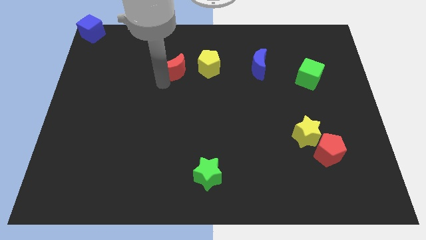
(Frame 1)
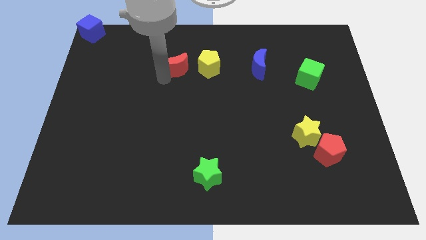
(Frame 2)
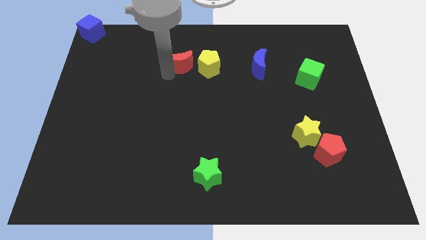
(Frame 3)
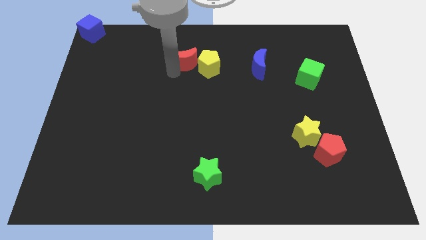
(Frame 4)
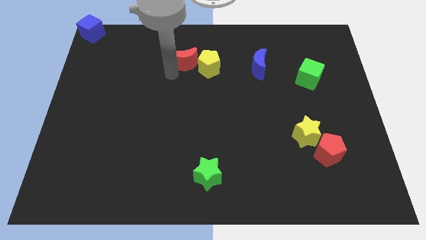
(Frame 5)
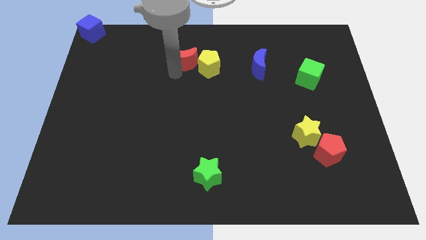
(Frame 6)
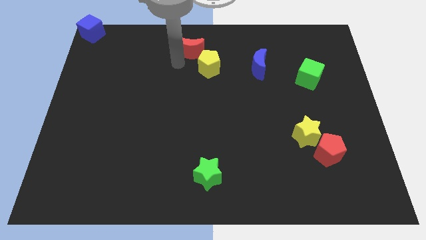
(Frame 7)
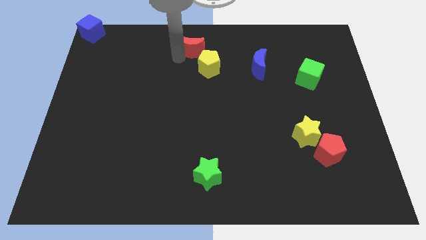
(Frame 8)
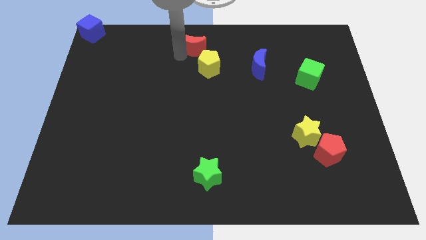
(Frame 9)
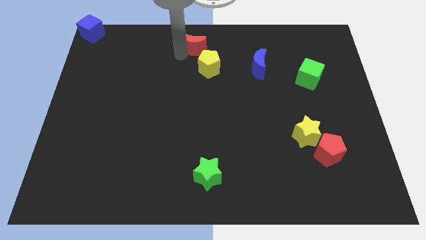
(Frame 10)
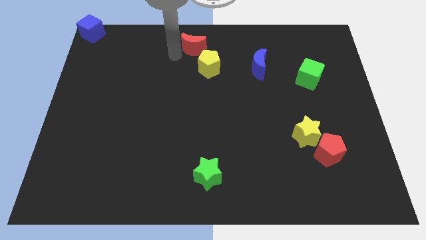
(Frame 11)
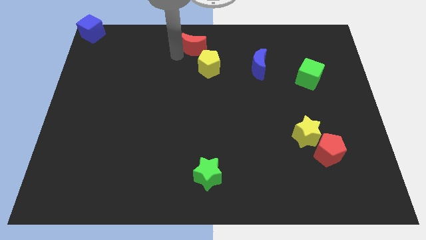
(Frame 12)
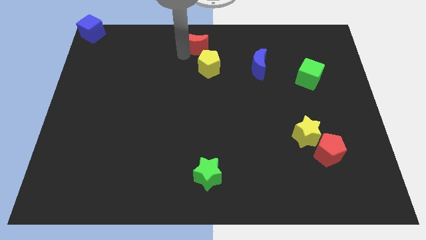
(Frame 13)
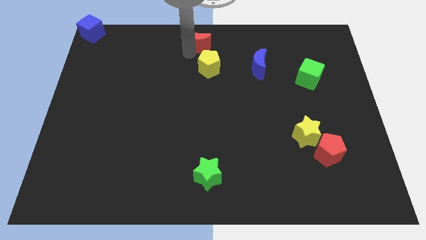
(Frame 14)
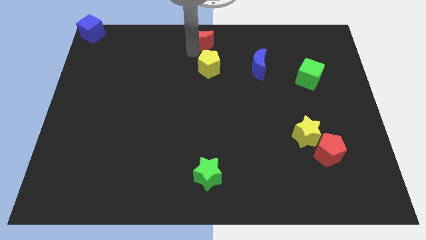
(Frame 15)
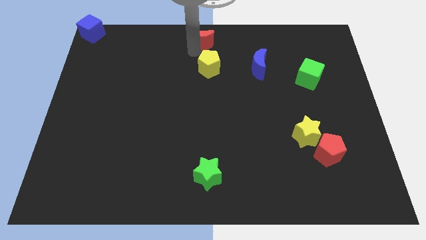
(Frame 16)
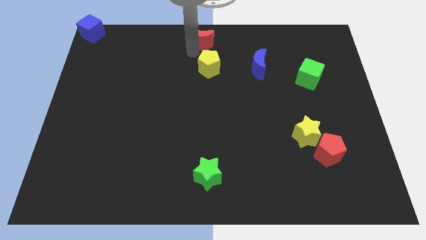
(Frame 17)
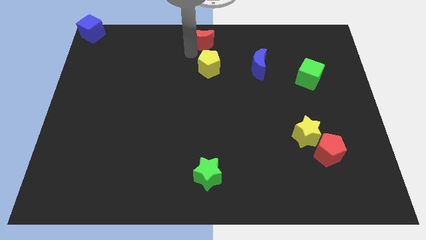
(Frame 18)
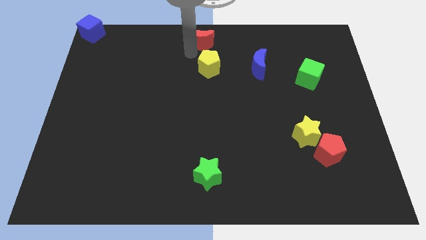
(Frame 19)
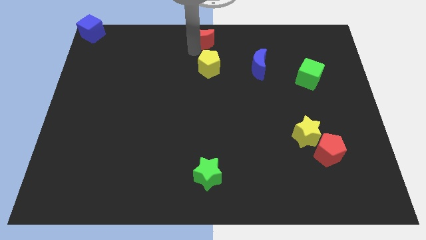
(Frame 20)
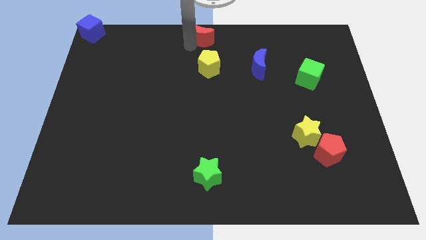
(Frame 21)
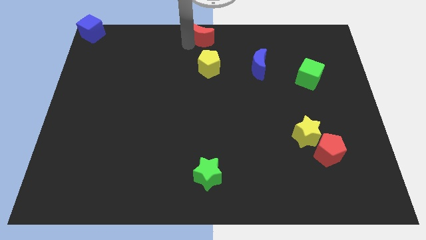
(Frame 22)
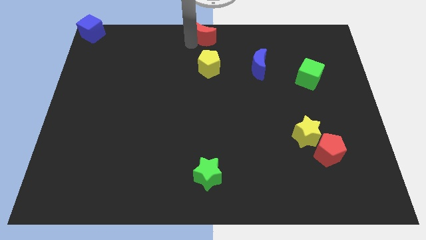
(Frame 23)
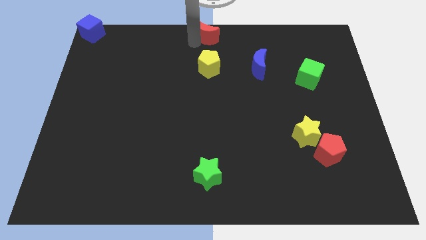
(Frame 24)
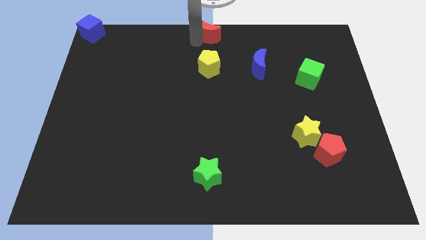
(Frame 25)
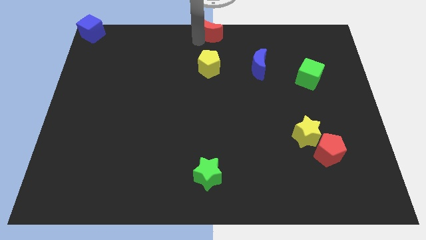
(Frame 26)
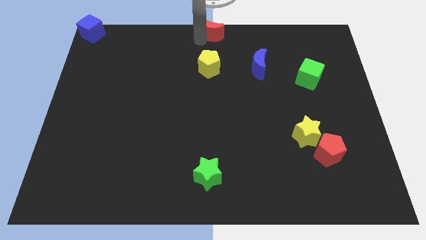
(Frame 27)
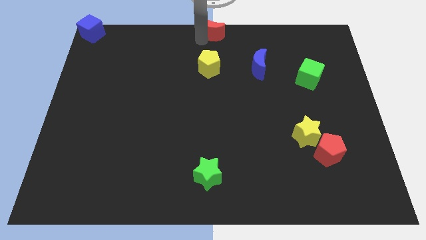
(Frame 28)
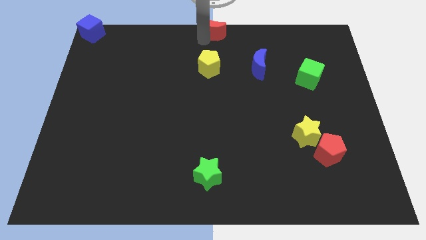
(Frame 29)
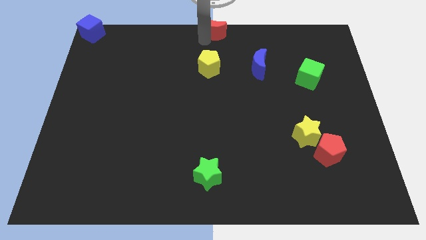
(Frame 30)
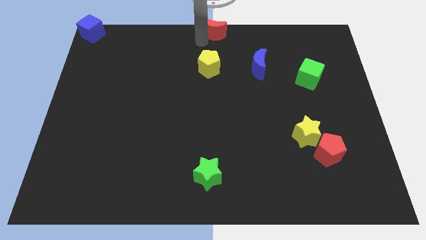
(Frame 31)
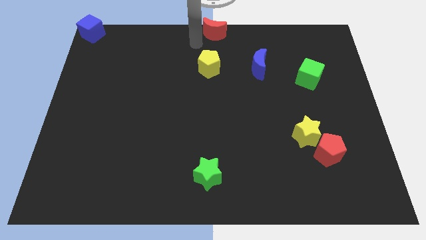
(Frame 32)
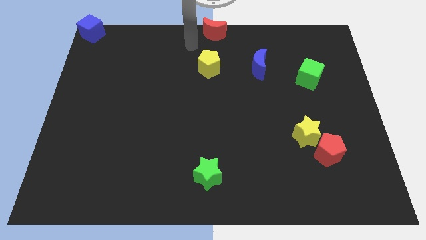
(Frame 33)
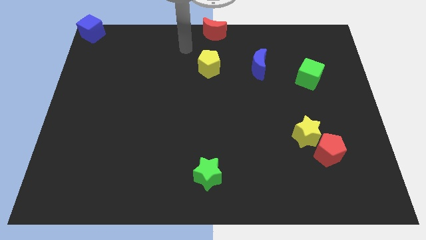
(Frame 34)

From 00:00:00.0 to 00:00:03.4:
push the red moon to the top center of the board

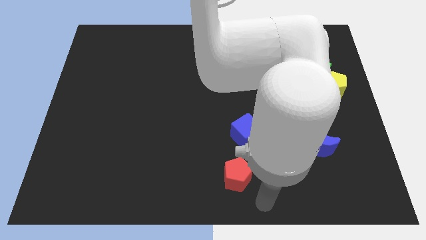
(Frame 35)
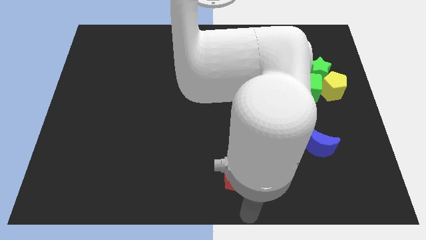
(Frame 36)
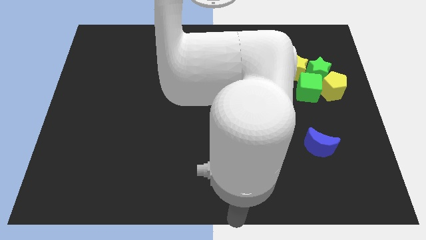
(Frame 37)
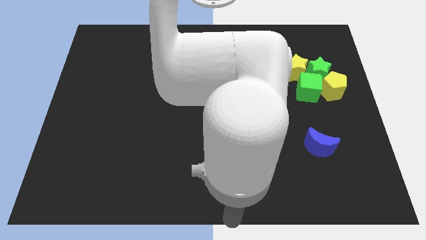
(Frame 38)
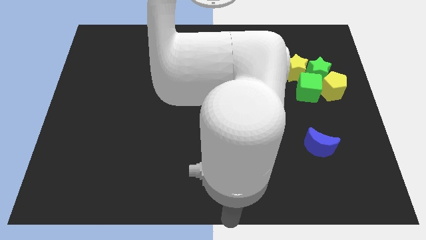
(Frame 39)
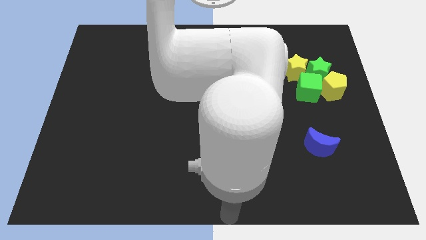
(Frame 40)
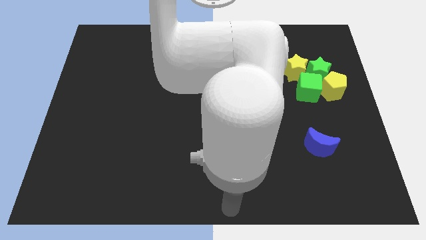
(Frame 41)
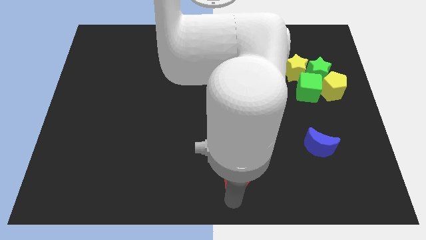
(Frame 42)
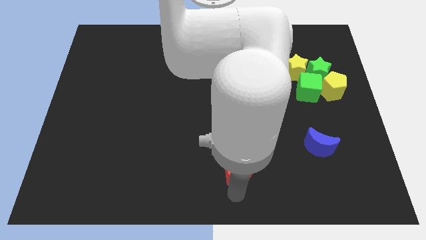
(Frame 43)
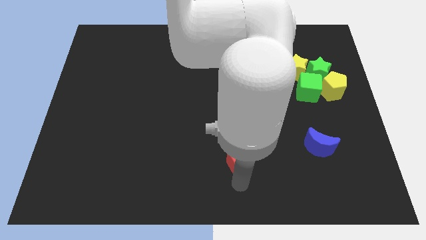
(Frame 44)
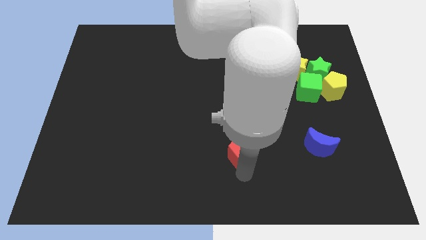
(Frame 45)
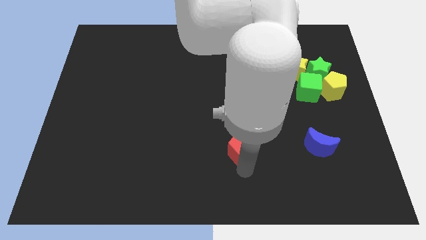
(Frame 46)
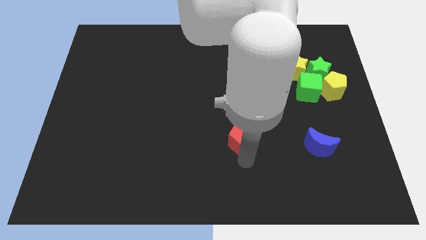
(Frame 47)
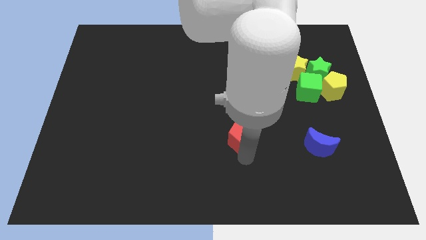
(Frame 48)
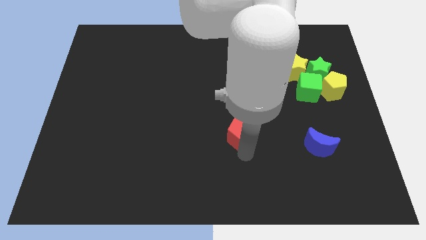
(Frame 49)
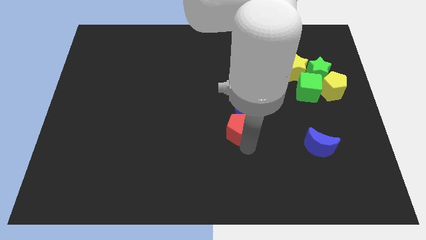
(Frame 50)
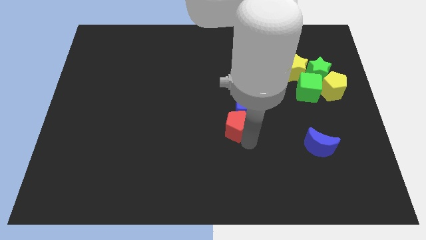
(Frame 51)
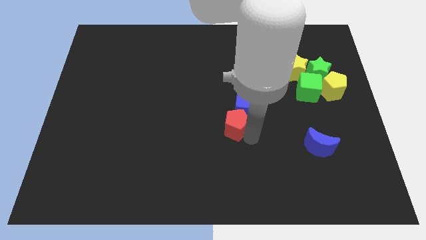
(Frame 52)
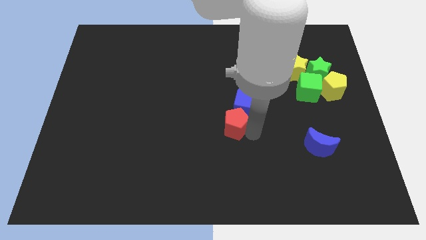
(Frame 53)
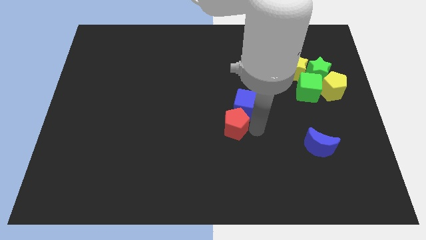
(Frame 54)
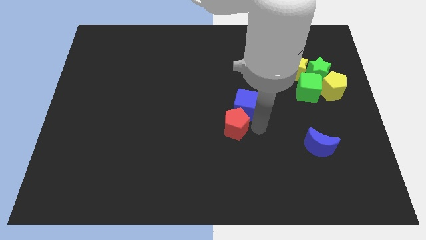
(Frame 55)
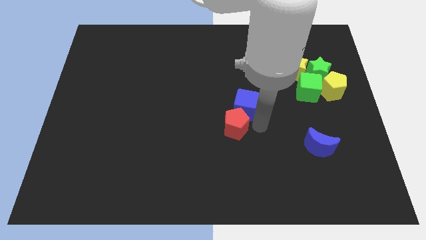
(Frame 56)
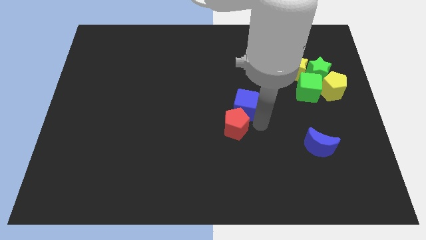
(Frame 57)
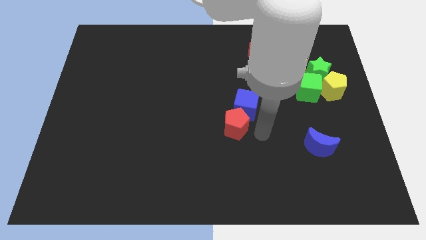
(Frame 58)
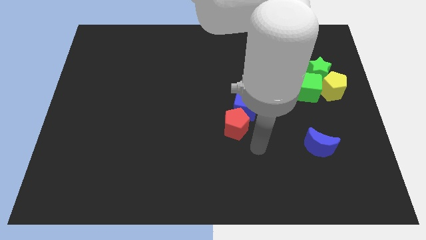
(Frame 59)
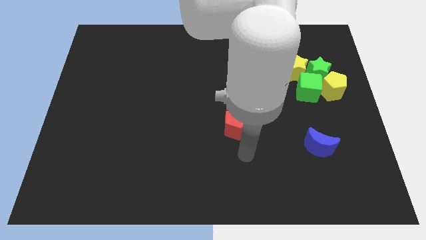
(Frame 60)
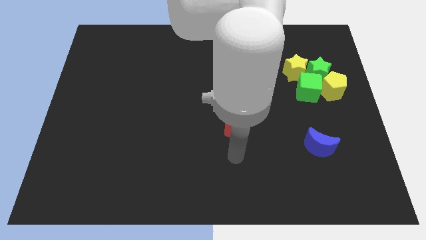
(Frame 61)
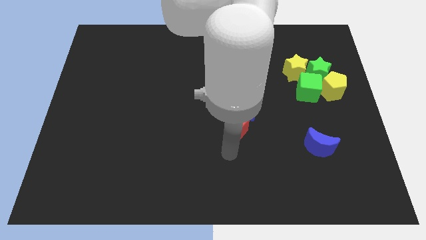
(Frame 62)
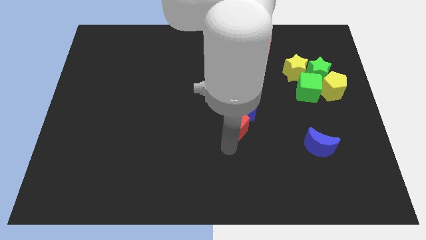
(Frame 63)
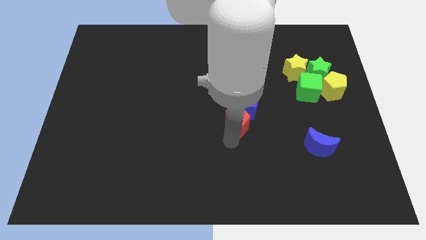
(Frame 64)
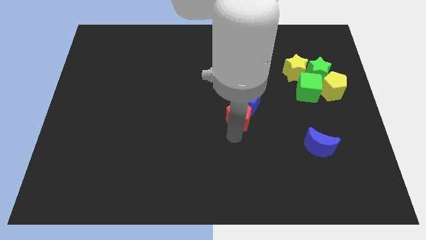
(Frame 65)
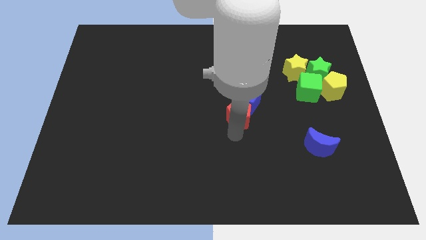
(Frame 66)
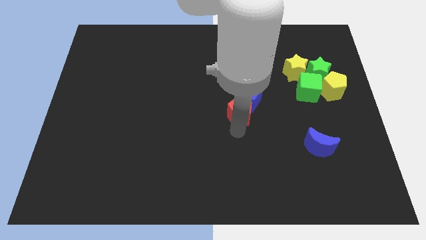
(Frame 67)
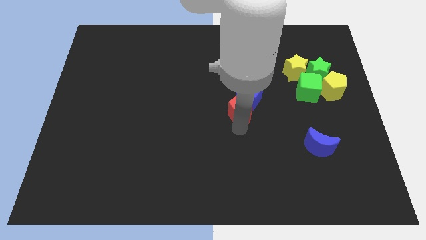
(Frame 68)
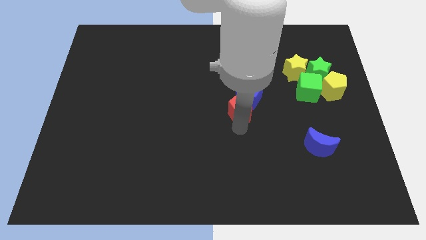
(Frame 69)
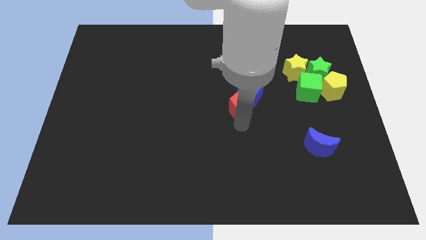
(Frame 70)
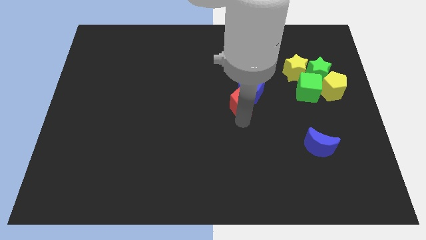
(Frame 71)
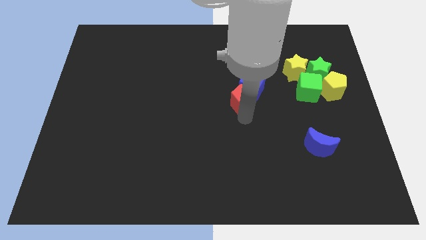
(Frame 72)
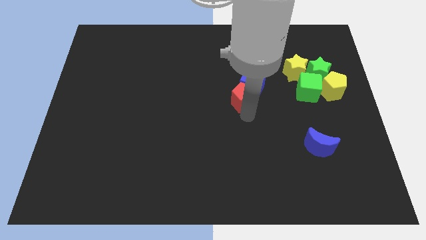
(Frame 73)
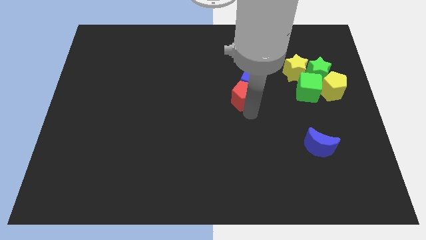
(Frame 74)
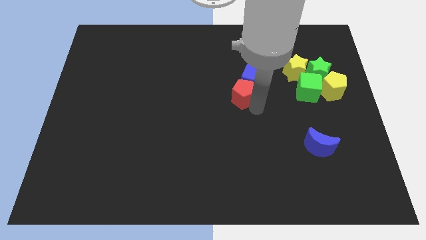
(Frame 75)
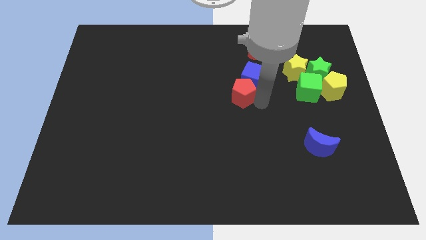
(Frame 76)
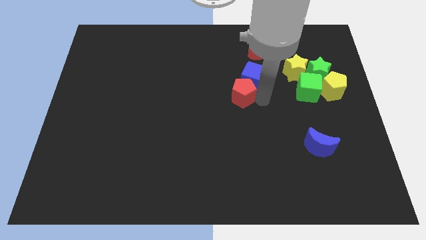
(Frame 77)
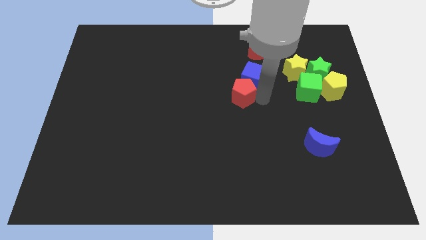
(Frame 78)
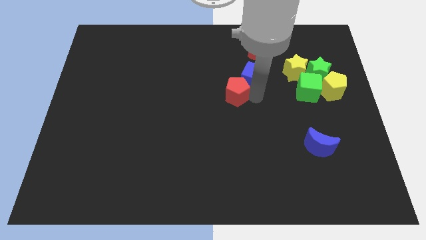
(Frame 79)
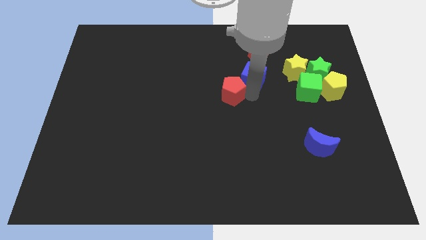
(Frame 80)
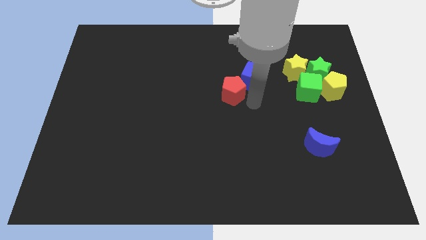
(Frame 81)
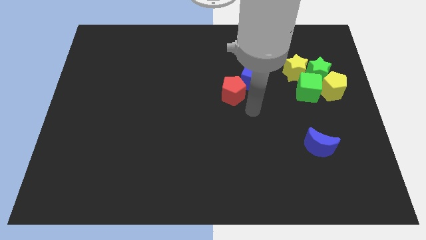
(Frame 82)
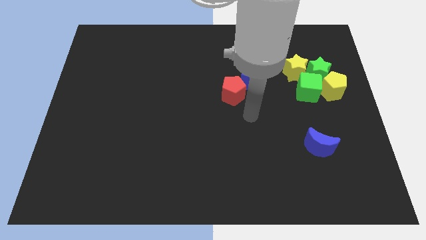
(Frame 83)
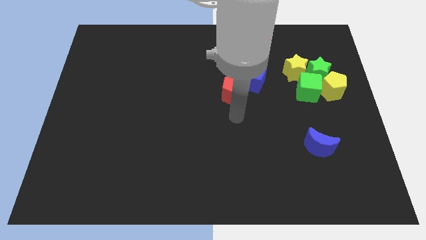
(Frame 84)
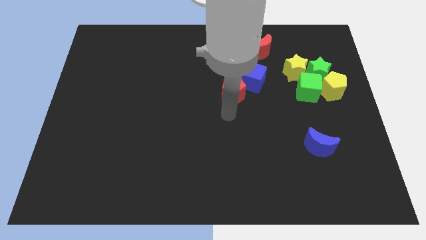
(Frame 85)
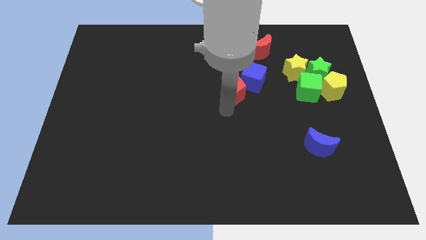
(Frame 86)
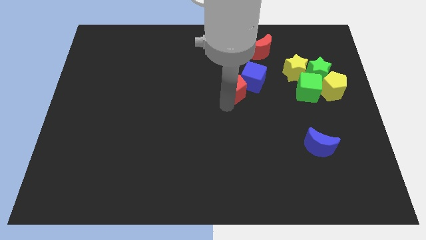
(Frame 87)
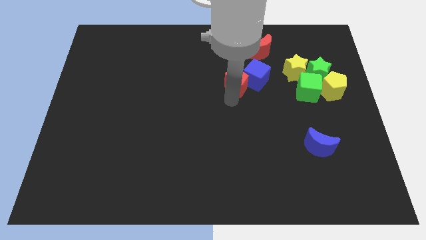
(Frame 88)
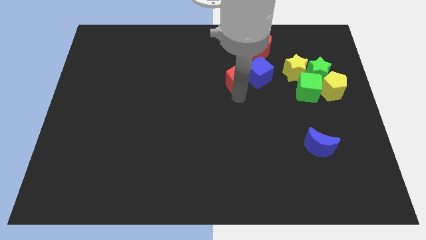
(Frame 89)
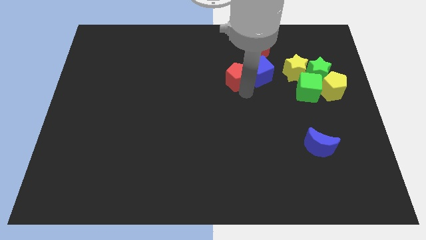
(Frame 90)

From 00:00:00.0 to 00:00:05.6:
push red pentagon into blue cube

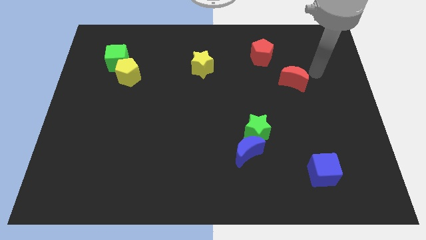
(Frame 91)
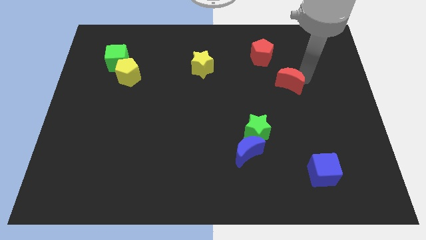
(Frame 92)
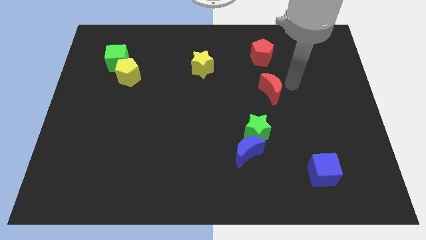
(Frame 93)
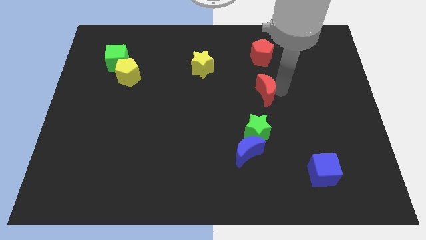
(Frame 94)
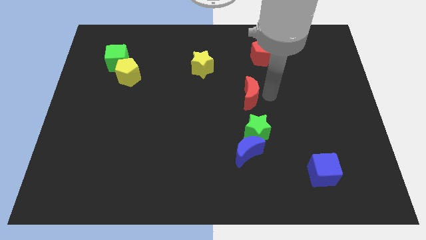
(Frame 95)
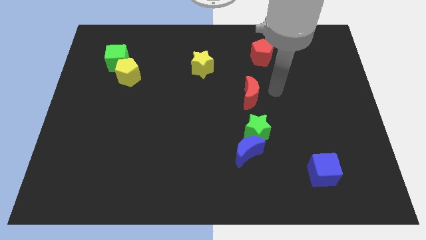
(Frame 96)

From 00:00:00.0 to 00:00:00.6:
move the red crescent above the green star
